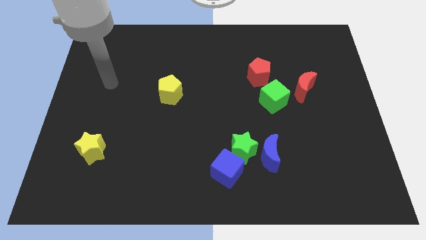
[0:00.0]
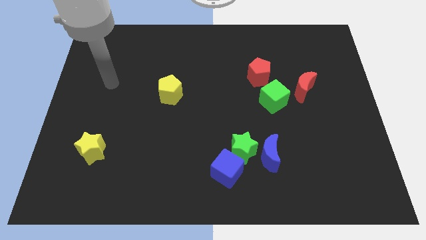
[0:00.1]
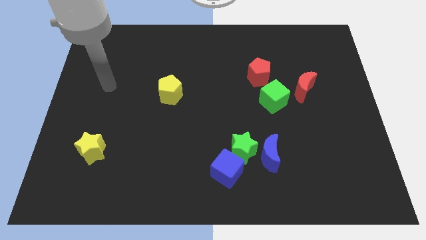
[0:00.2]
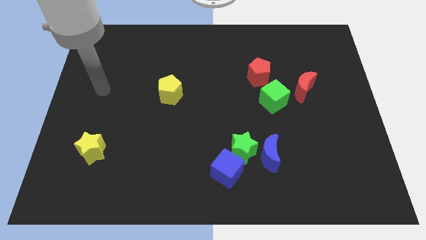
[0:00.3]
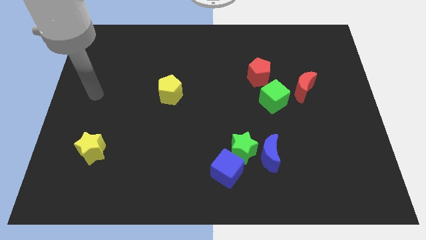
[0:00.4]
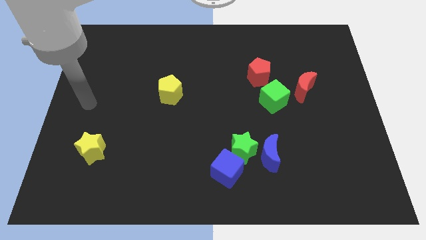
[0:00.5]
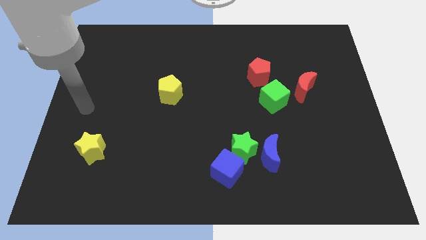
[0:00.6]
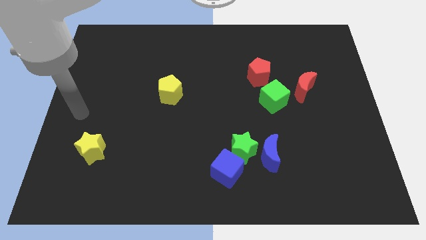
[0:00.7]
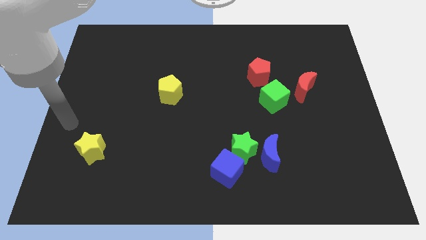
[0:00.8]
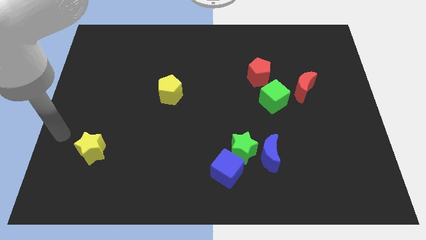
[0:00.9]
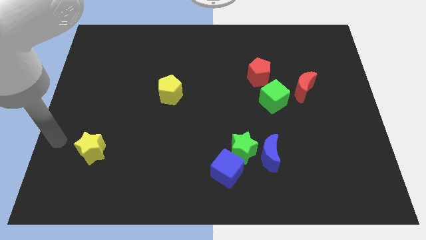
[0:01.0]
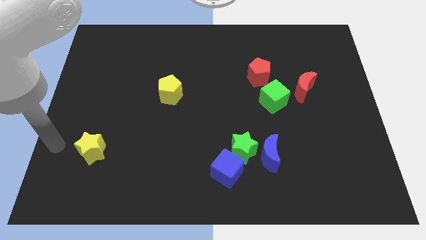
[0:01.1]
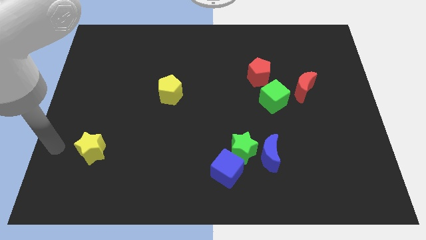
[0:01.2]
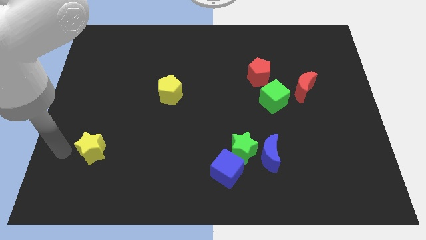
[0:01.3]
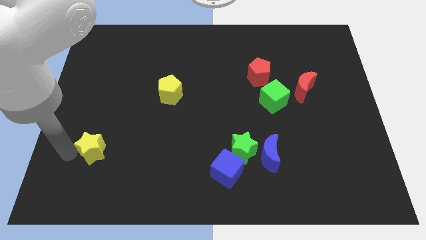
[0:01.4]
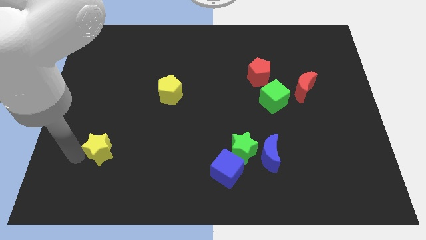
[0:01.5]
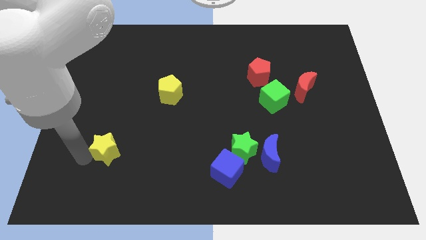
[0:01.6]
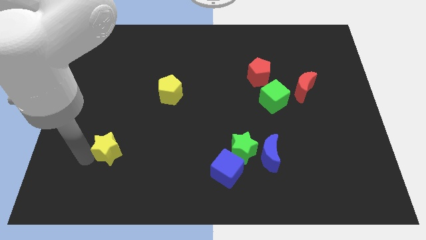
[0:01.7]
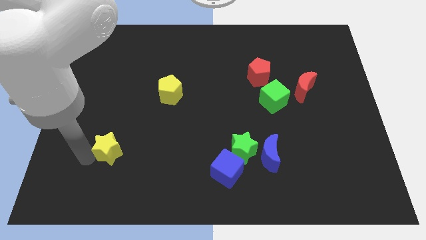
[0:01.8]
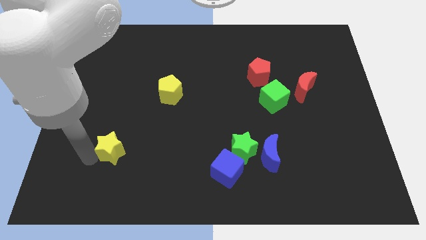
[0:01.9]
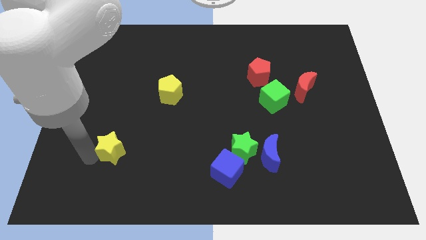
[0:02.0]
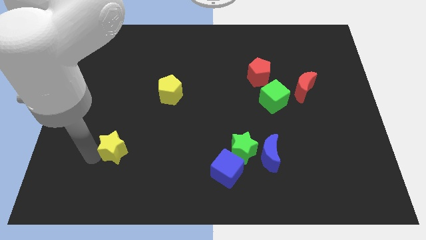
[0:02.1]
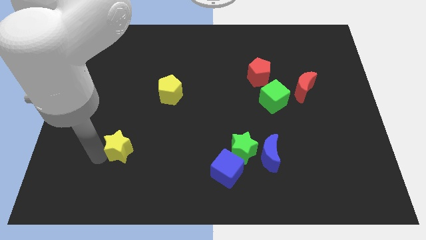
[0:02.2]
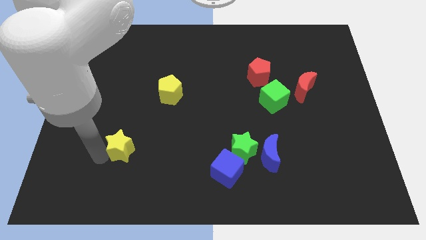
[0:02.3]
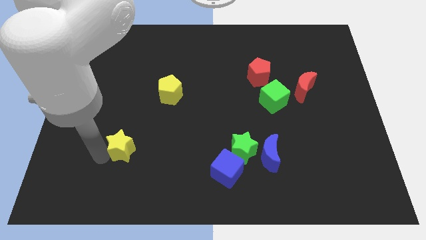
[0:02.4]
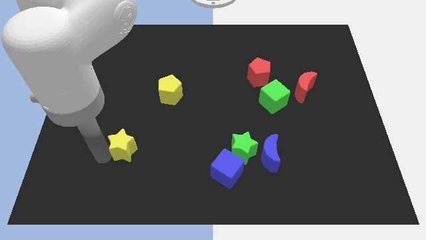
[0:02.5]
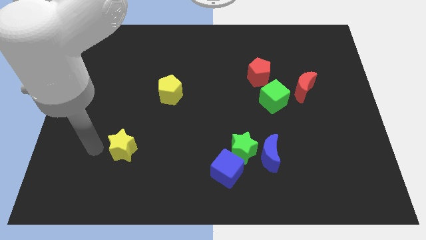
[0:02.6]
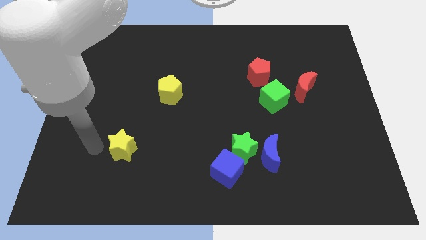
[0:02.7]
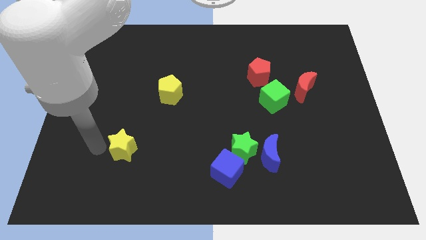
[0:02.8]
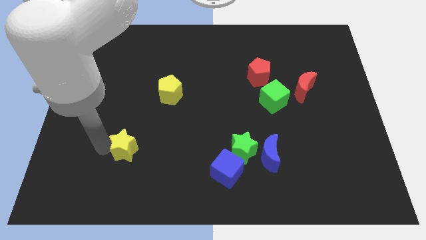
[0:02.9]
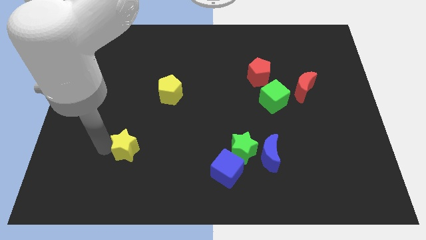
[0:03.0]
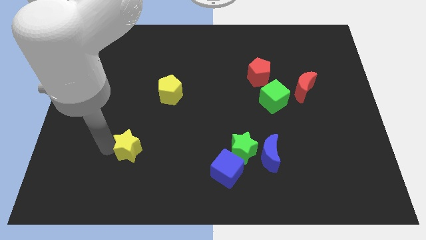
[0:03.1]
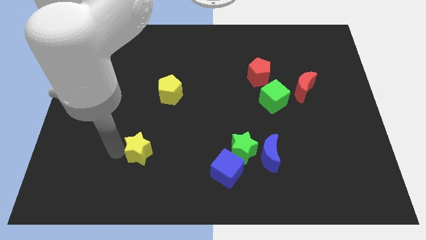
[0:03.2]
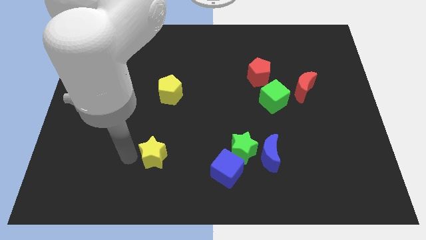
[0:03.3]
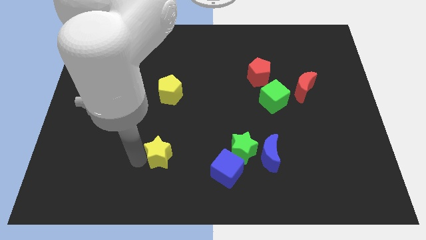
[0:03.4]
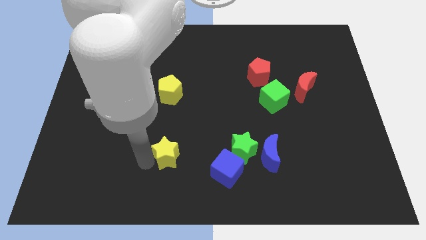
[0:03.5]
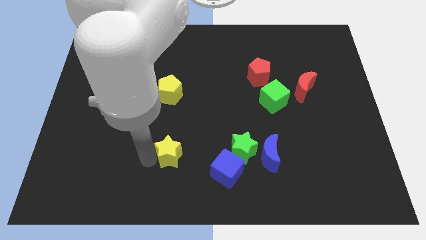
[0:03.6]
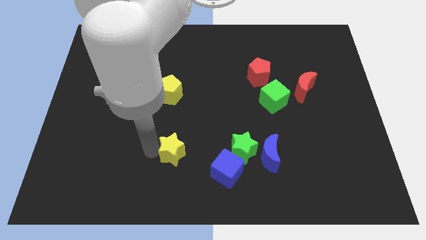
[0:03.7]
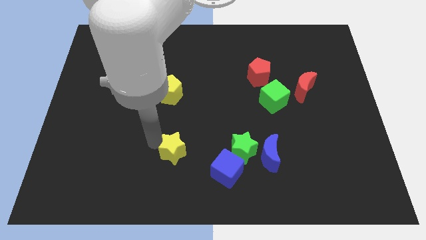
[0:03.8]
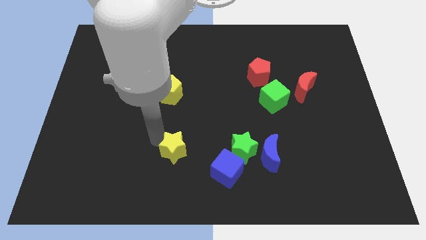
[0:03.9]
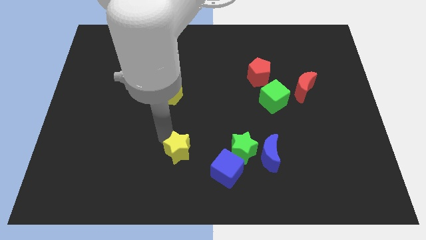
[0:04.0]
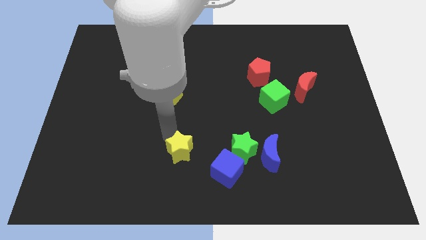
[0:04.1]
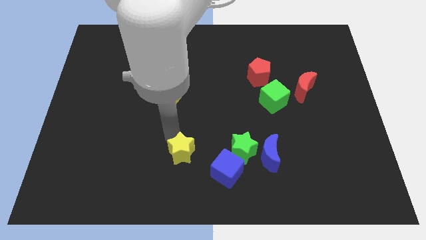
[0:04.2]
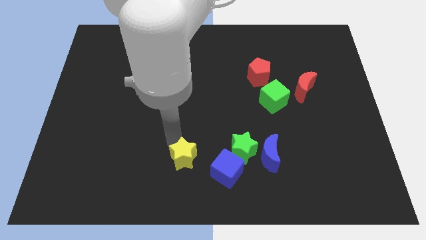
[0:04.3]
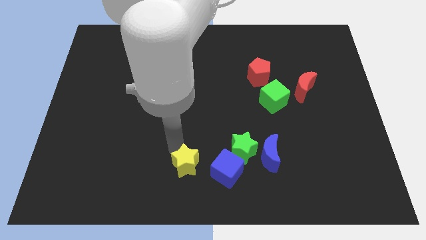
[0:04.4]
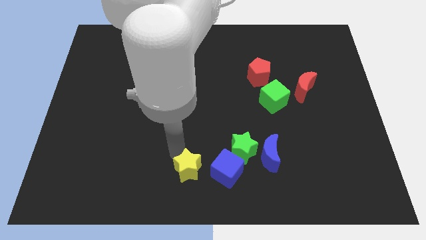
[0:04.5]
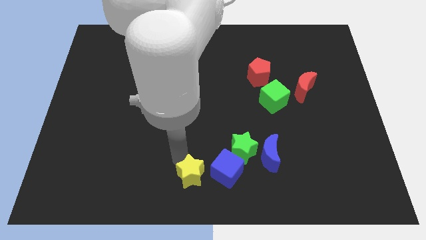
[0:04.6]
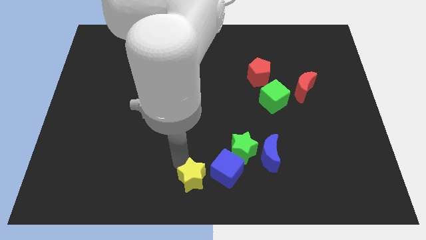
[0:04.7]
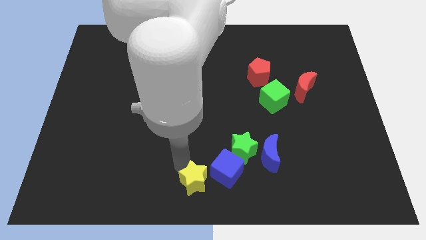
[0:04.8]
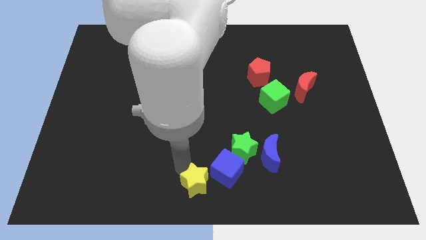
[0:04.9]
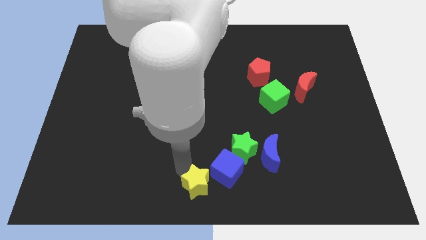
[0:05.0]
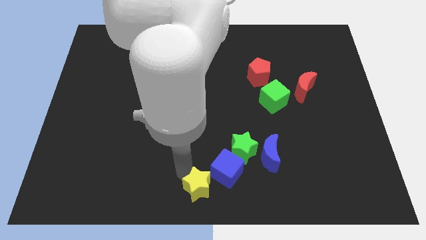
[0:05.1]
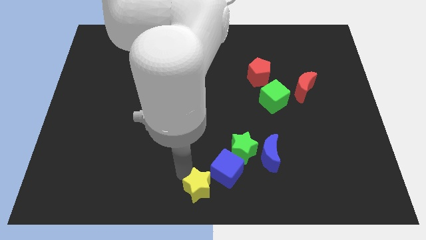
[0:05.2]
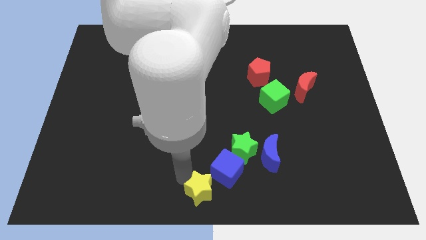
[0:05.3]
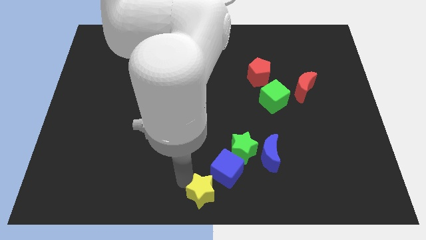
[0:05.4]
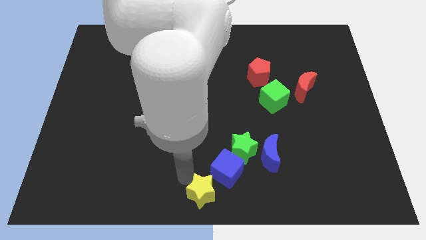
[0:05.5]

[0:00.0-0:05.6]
push the yellow star diagonal to the blue cube

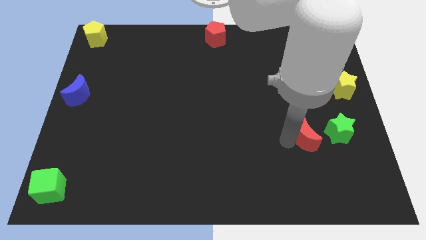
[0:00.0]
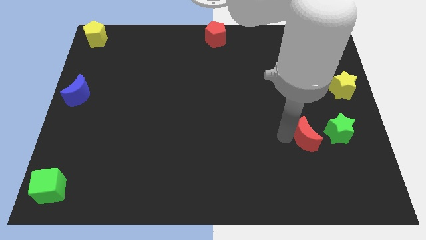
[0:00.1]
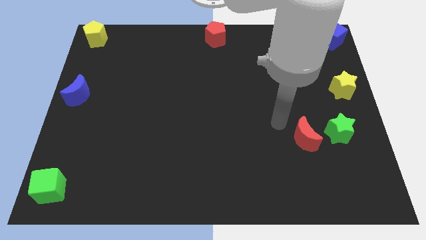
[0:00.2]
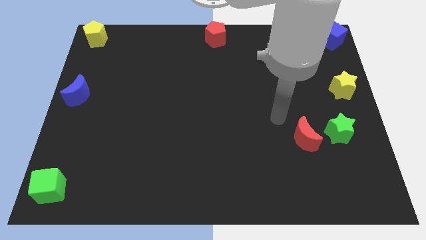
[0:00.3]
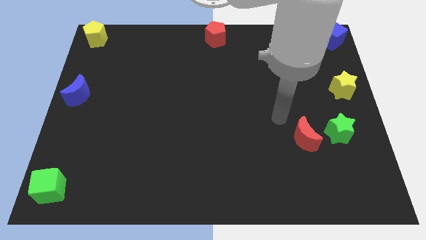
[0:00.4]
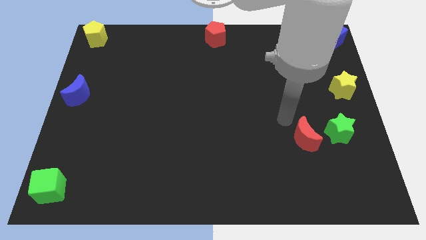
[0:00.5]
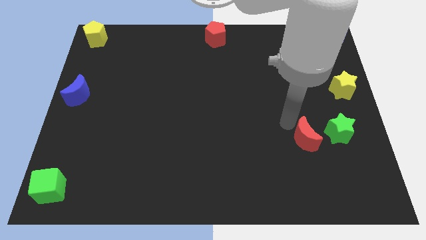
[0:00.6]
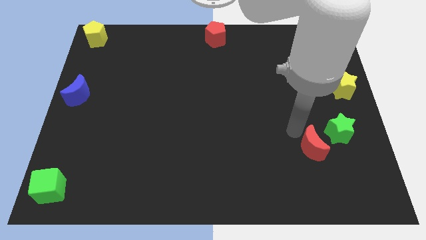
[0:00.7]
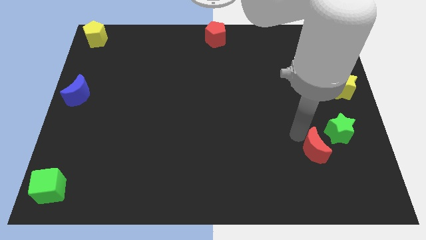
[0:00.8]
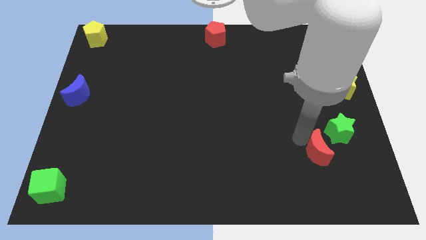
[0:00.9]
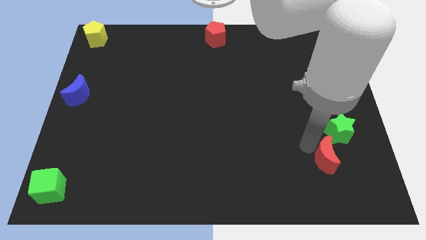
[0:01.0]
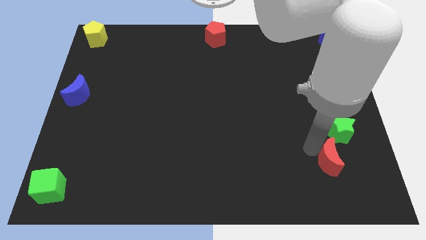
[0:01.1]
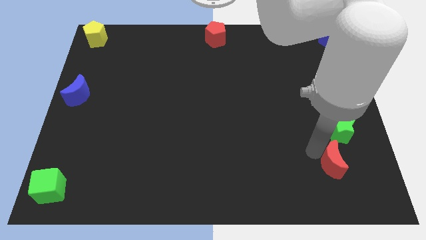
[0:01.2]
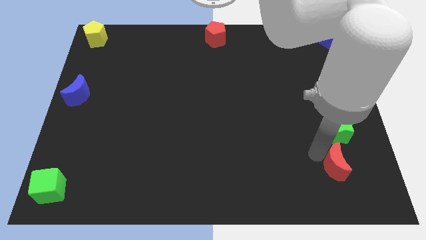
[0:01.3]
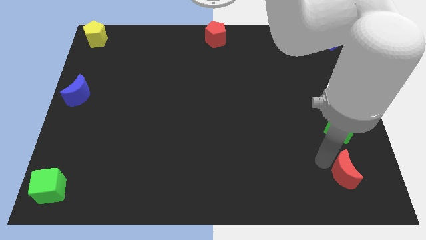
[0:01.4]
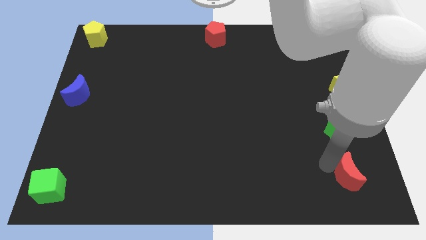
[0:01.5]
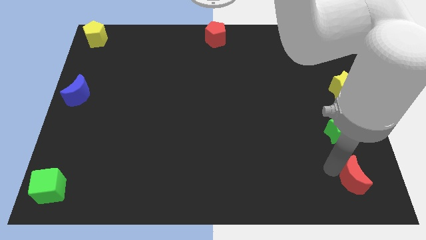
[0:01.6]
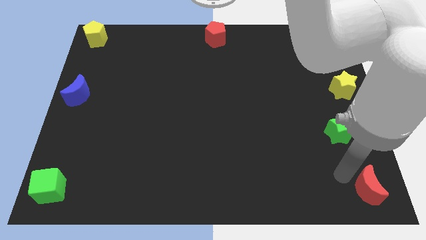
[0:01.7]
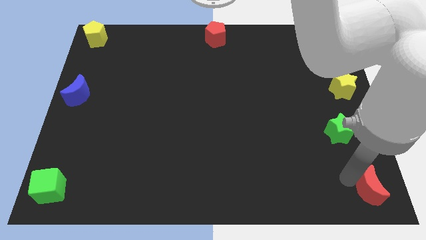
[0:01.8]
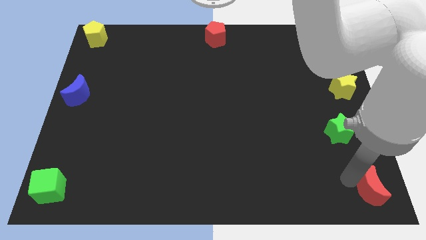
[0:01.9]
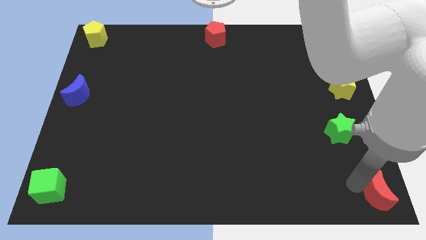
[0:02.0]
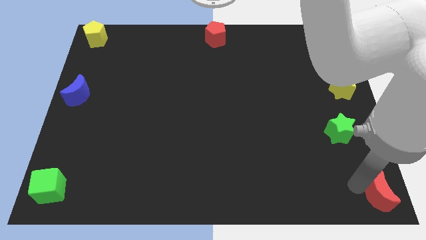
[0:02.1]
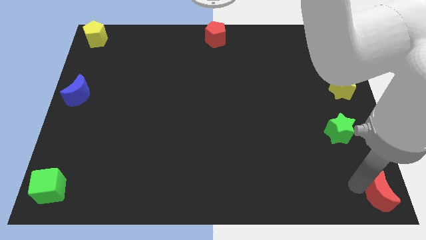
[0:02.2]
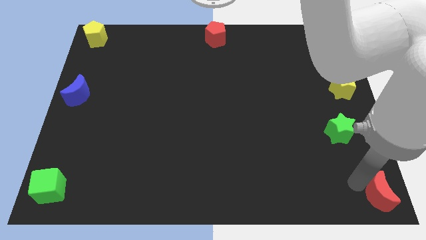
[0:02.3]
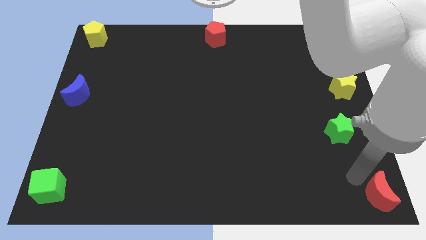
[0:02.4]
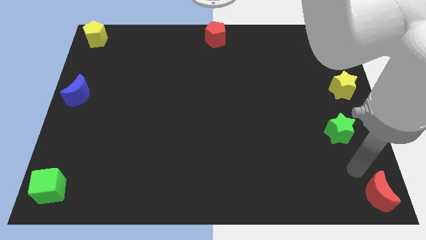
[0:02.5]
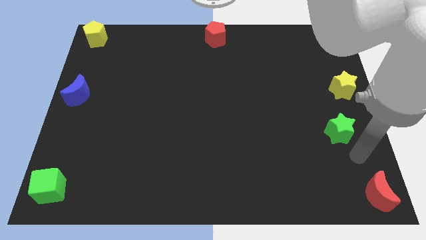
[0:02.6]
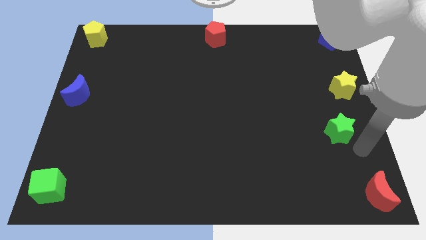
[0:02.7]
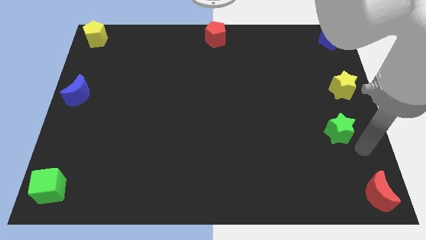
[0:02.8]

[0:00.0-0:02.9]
place the red moon at the bottom right side corner of the board

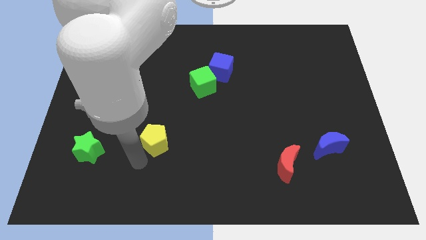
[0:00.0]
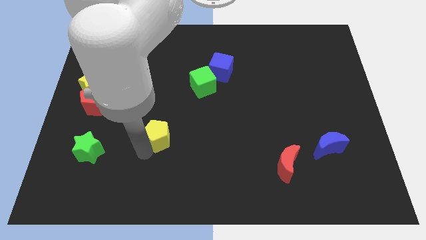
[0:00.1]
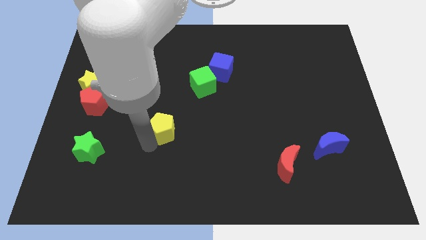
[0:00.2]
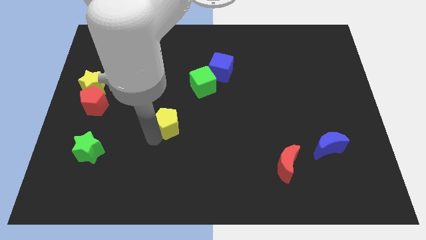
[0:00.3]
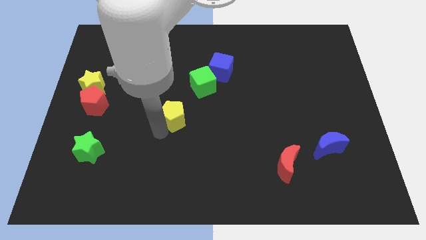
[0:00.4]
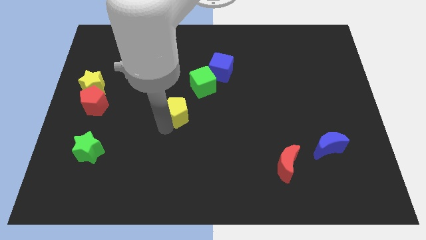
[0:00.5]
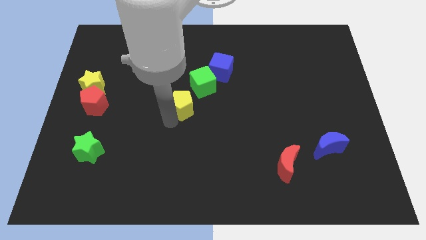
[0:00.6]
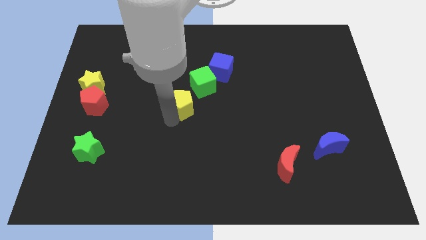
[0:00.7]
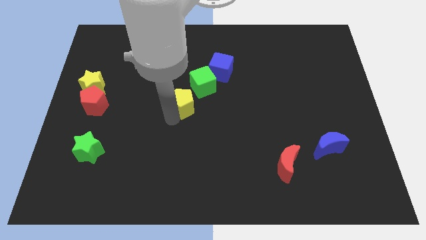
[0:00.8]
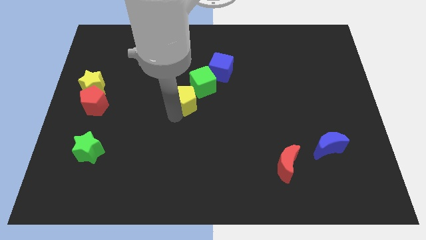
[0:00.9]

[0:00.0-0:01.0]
place yellow pentagon below green cube
